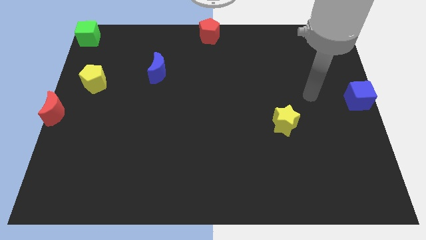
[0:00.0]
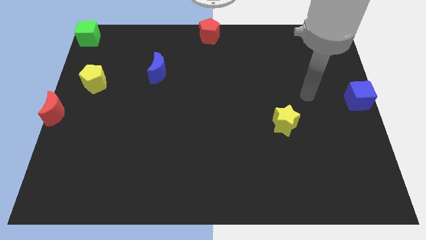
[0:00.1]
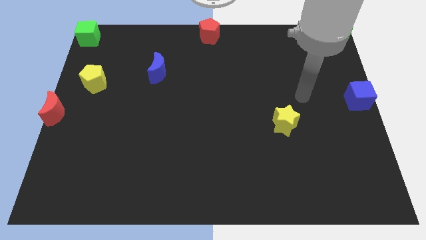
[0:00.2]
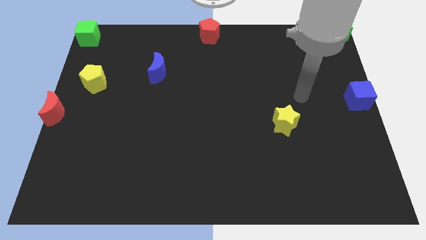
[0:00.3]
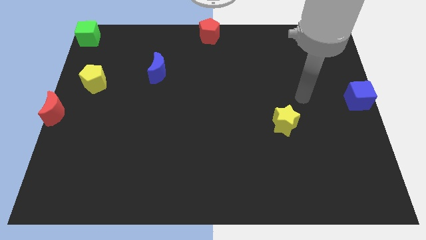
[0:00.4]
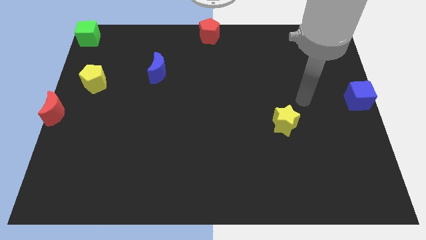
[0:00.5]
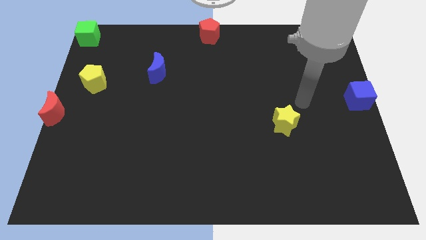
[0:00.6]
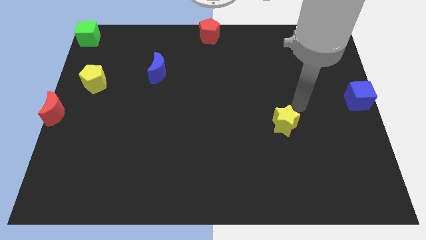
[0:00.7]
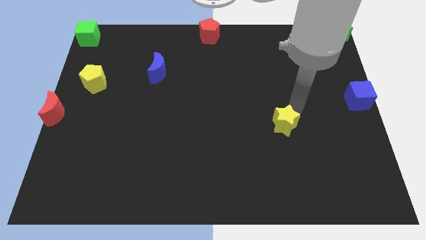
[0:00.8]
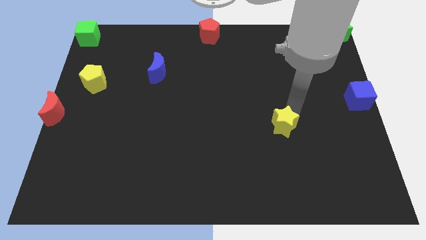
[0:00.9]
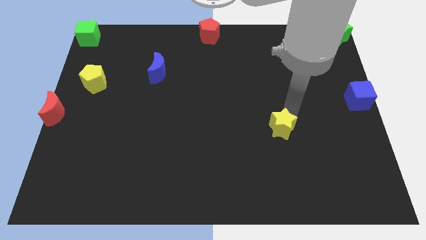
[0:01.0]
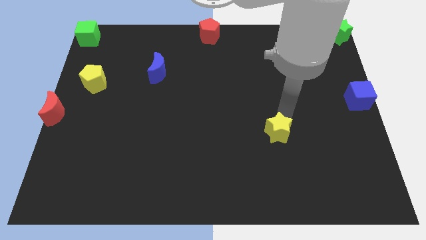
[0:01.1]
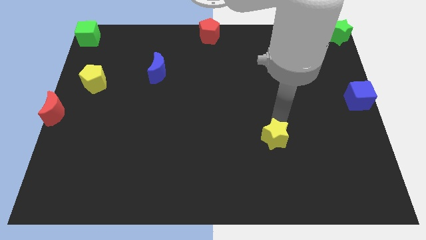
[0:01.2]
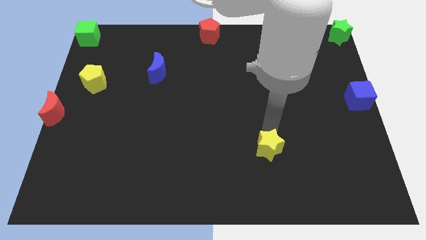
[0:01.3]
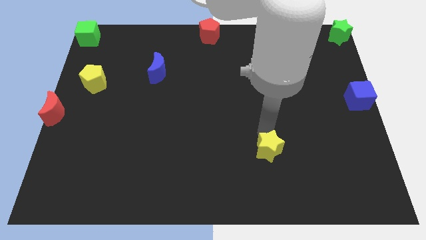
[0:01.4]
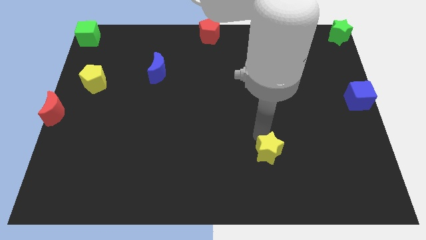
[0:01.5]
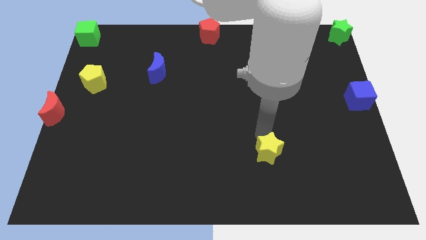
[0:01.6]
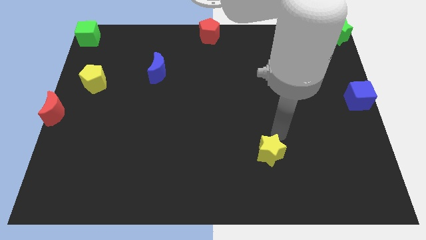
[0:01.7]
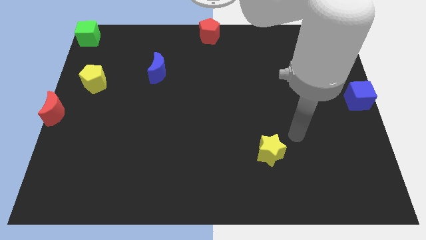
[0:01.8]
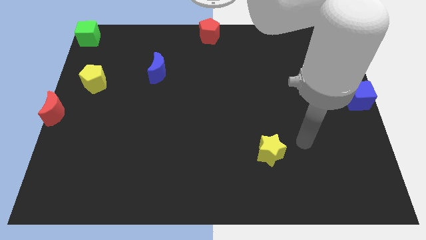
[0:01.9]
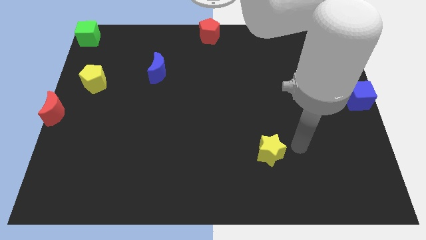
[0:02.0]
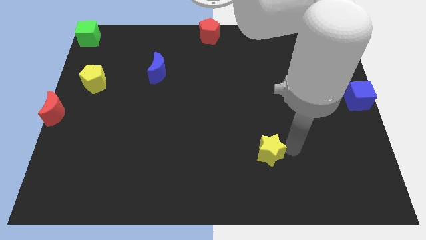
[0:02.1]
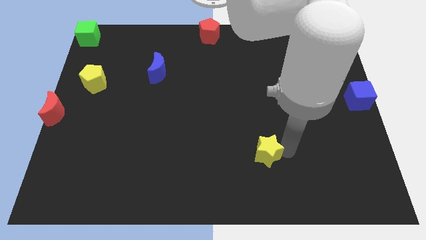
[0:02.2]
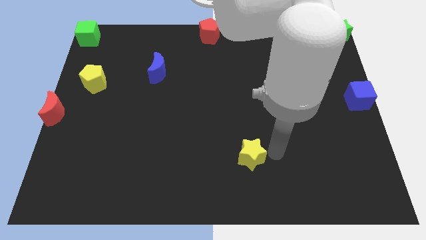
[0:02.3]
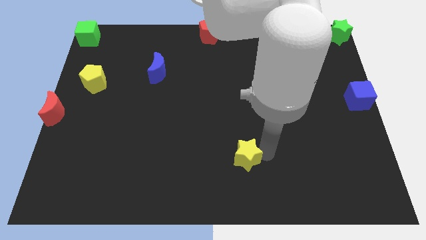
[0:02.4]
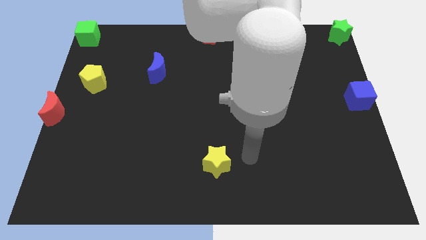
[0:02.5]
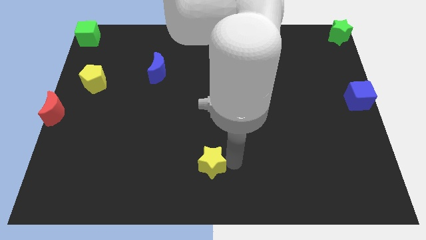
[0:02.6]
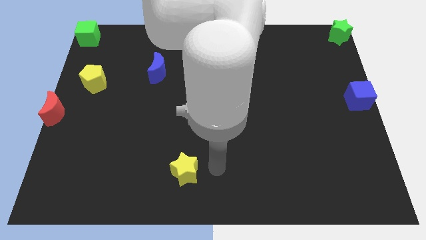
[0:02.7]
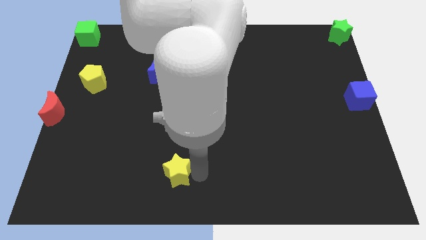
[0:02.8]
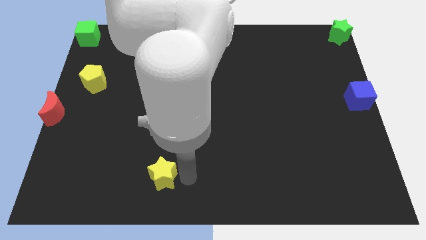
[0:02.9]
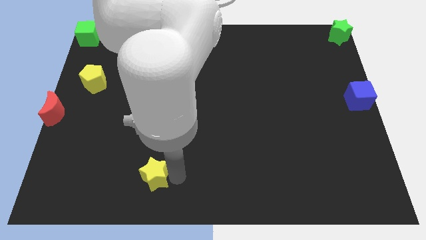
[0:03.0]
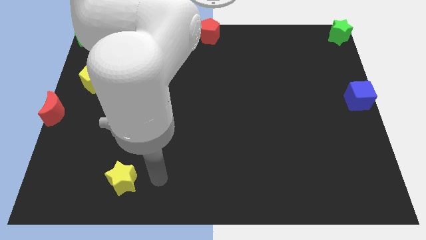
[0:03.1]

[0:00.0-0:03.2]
slide the yellow star towards the bottom left side of the board

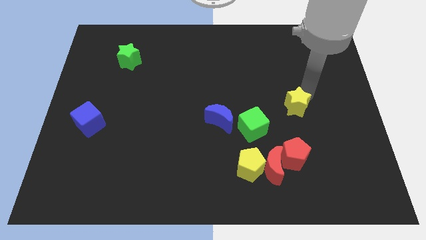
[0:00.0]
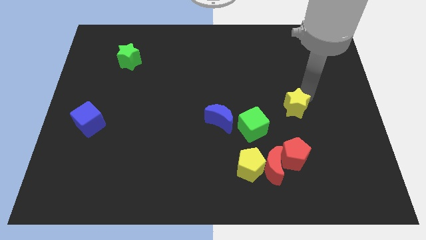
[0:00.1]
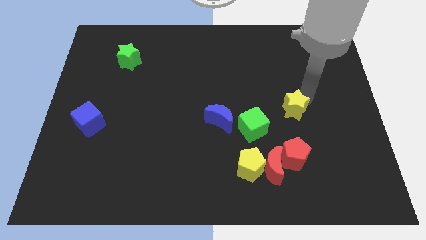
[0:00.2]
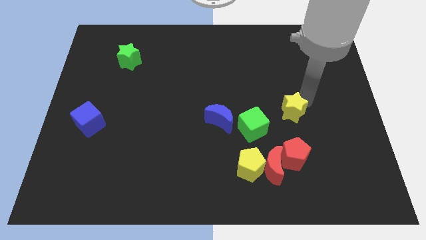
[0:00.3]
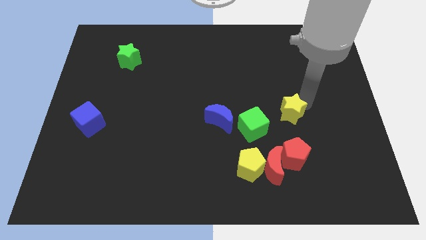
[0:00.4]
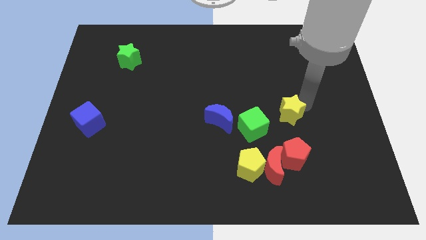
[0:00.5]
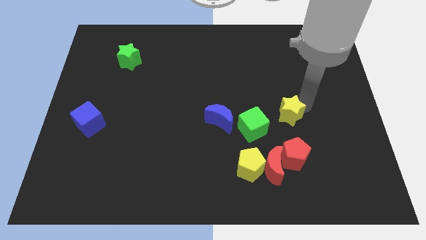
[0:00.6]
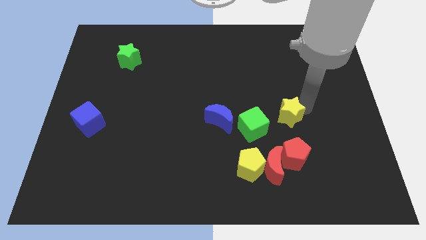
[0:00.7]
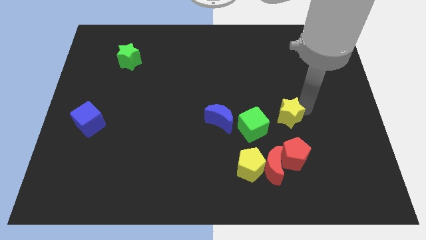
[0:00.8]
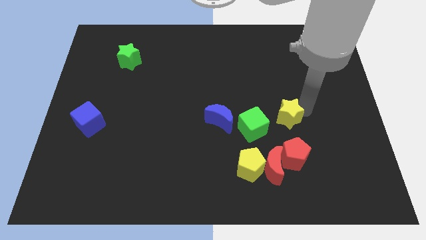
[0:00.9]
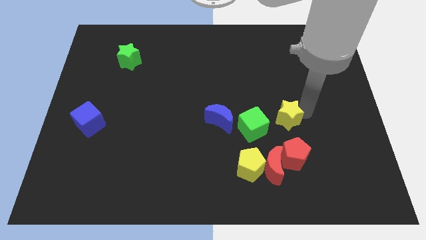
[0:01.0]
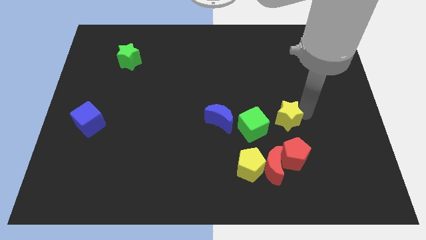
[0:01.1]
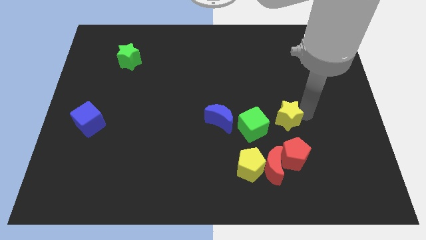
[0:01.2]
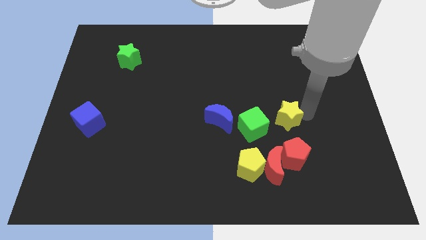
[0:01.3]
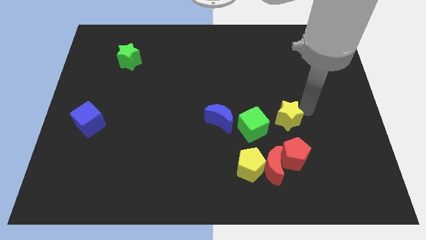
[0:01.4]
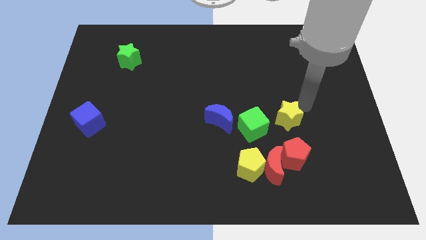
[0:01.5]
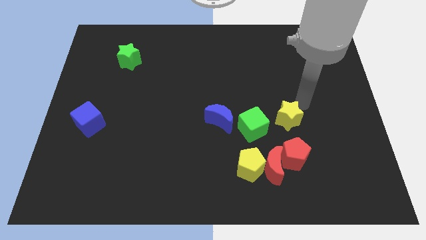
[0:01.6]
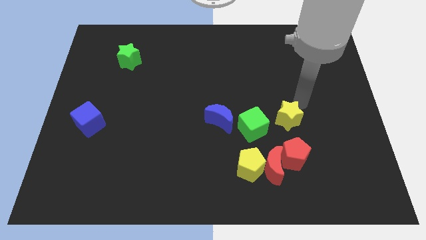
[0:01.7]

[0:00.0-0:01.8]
place the yellow star to the right side of the green cube

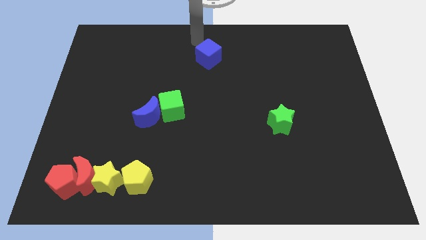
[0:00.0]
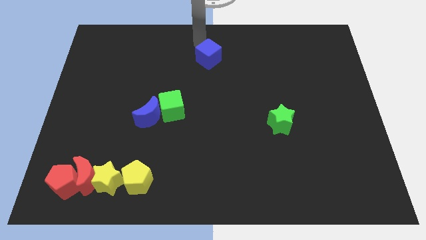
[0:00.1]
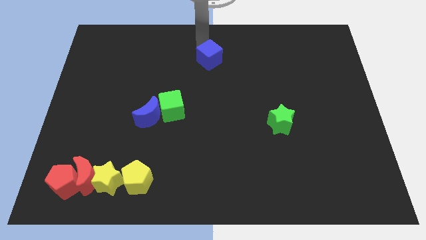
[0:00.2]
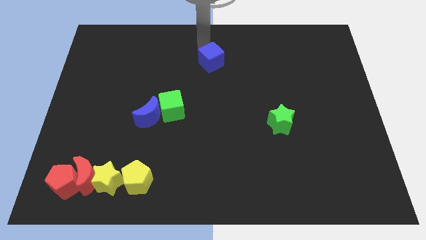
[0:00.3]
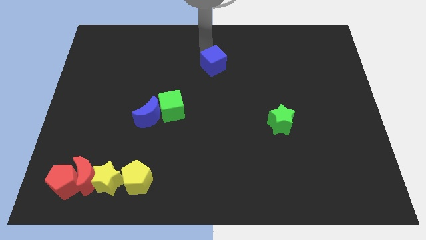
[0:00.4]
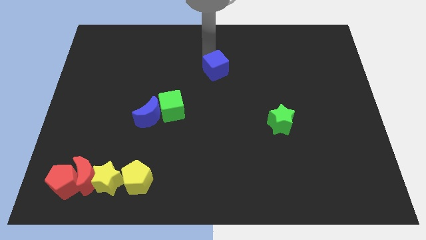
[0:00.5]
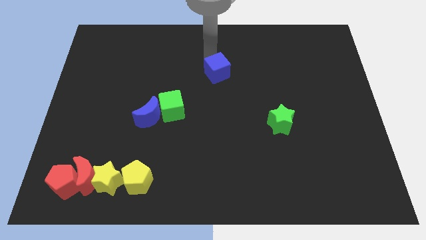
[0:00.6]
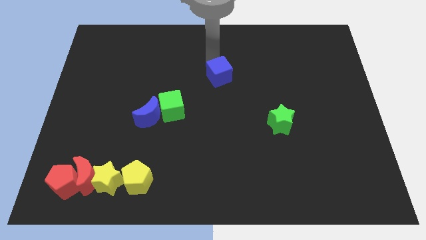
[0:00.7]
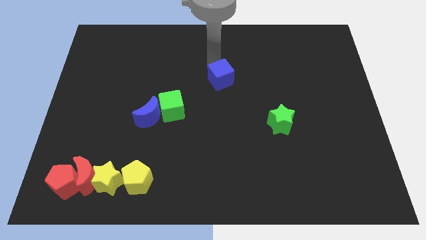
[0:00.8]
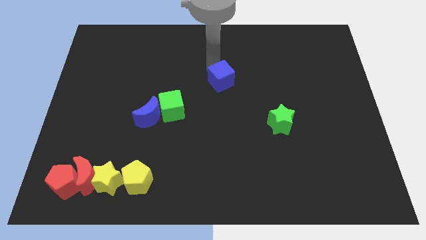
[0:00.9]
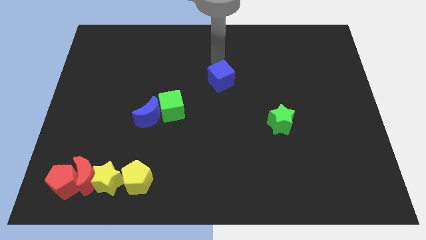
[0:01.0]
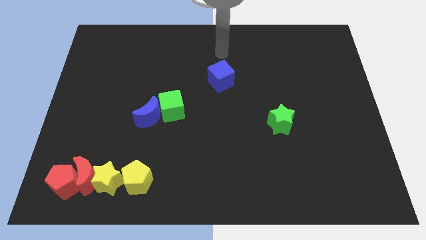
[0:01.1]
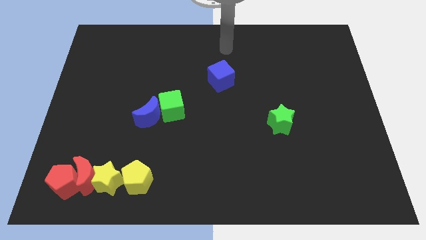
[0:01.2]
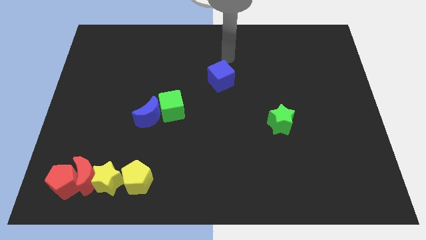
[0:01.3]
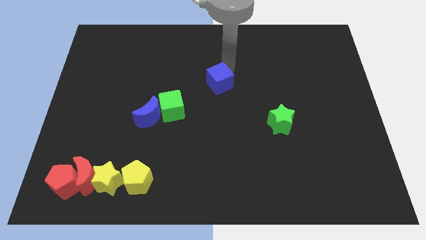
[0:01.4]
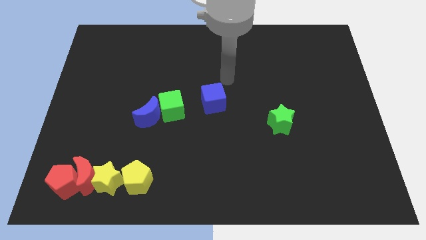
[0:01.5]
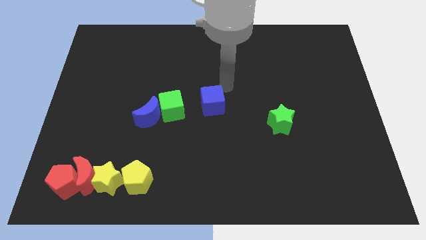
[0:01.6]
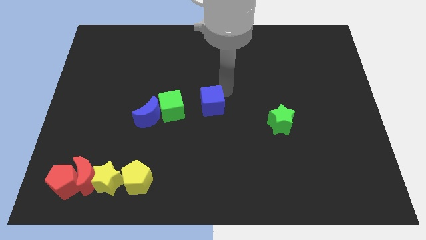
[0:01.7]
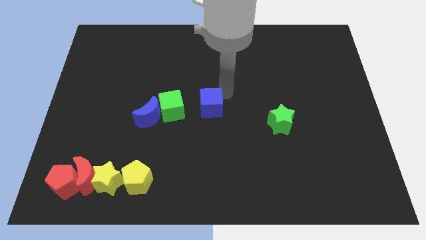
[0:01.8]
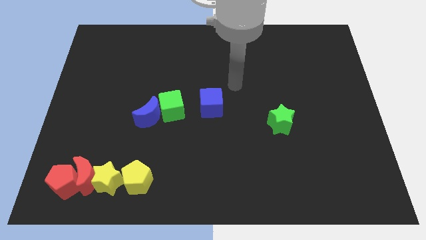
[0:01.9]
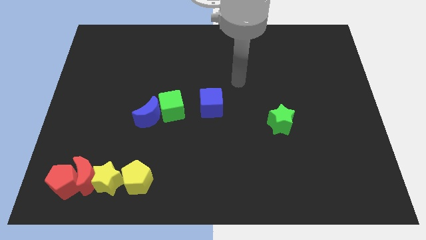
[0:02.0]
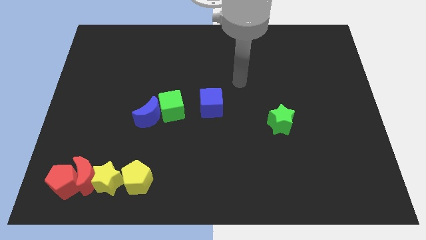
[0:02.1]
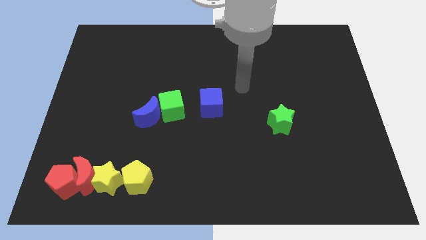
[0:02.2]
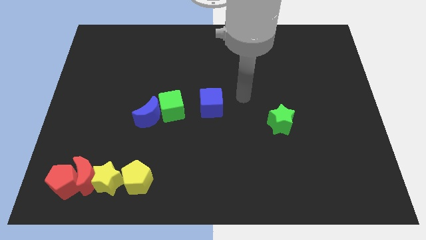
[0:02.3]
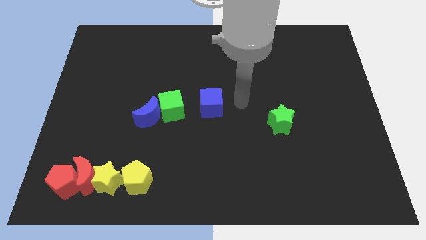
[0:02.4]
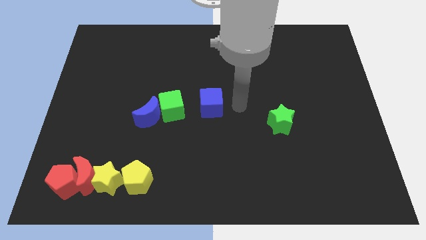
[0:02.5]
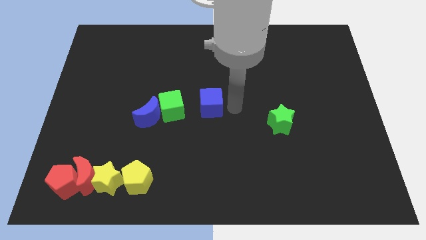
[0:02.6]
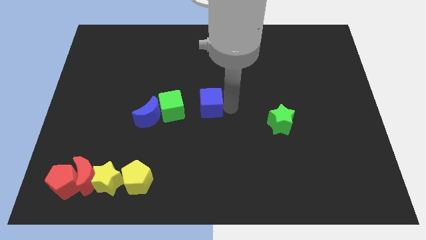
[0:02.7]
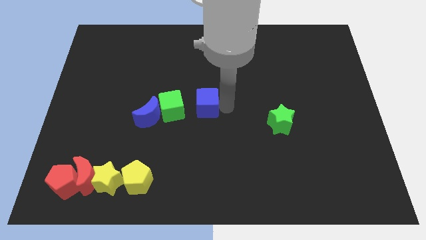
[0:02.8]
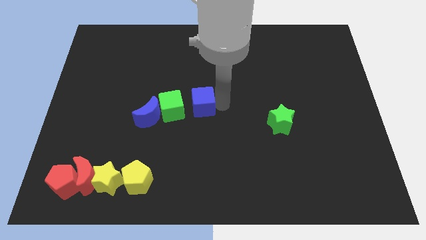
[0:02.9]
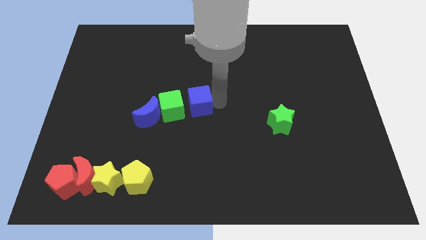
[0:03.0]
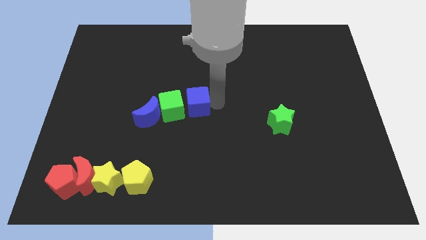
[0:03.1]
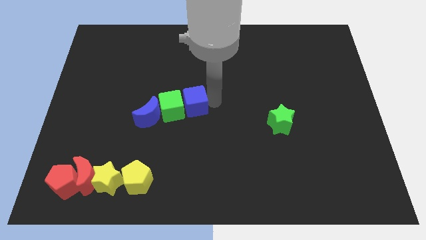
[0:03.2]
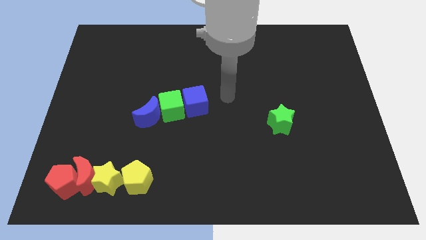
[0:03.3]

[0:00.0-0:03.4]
move the blue cube into the green cube

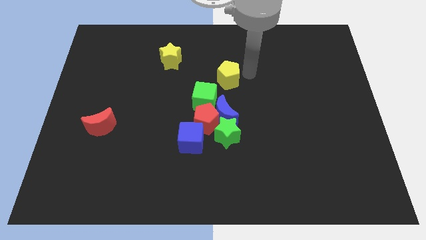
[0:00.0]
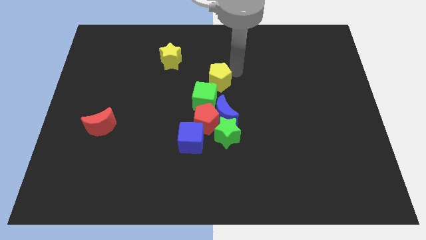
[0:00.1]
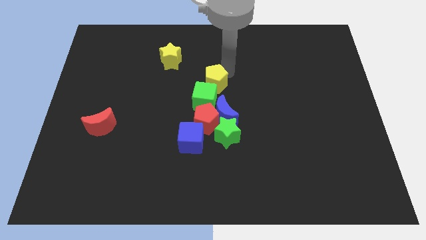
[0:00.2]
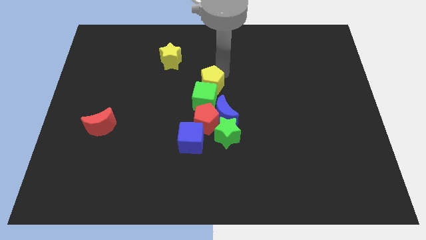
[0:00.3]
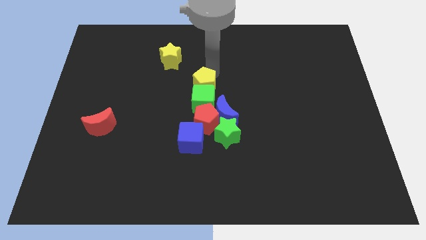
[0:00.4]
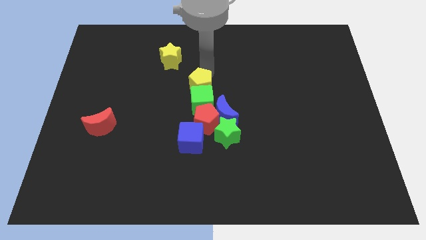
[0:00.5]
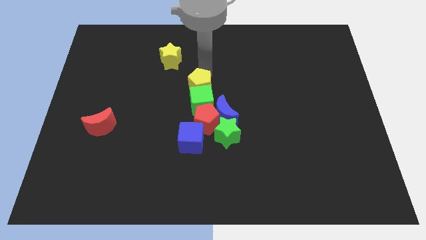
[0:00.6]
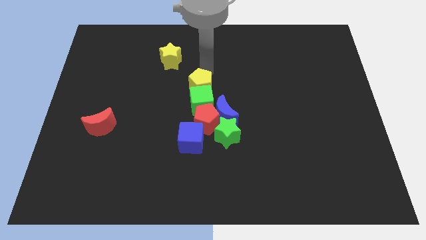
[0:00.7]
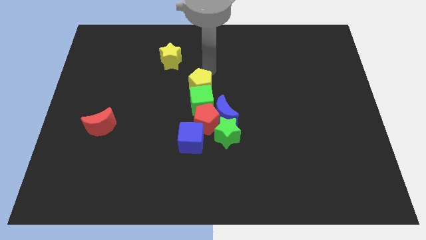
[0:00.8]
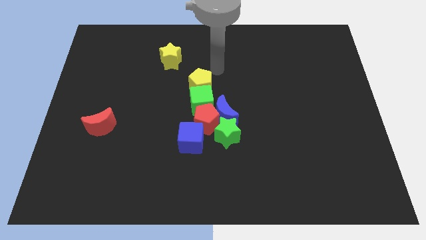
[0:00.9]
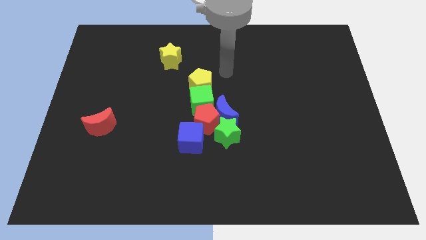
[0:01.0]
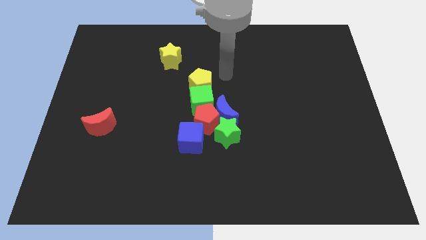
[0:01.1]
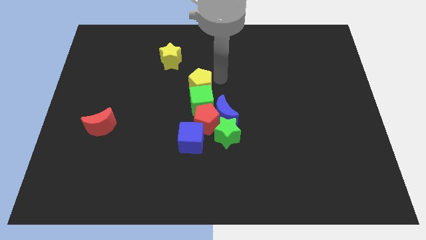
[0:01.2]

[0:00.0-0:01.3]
place the yellow pentagon above the green cube
